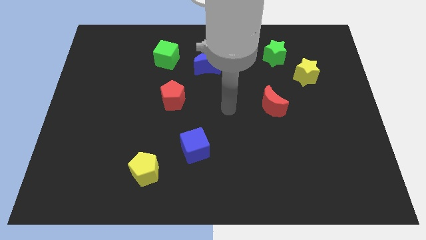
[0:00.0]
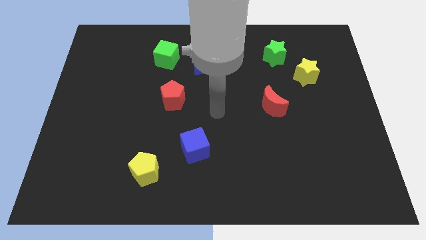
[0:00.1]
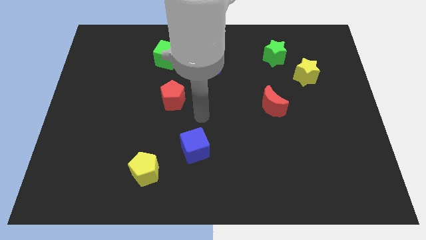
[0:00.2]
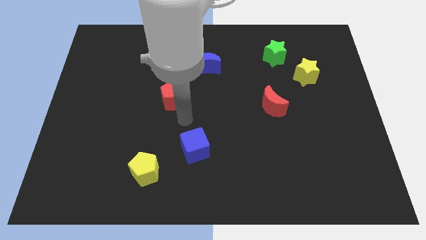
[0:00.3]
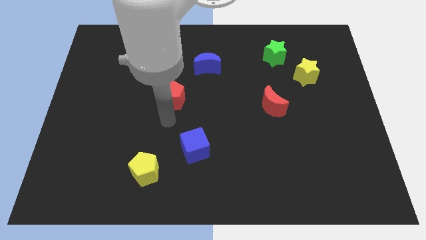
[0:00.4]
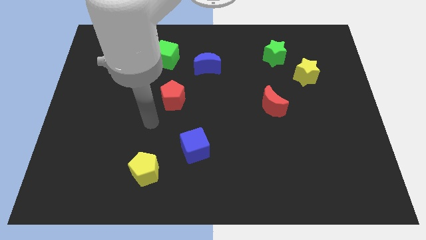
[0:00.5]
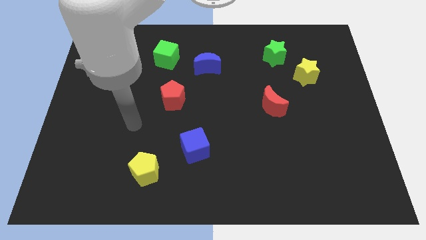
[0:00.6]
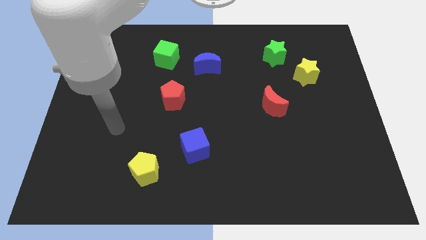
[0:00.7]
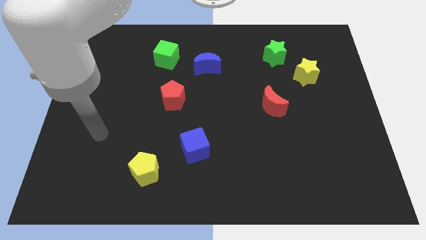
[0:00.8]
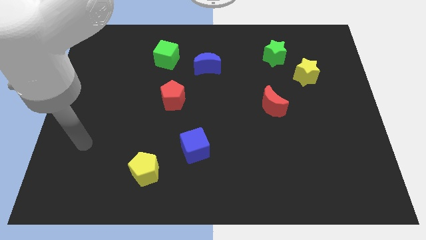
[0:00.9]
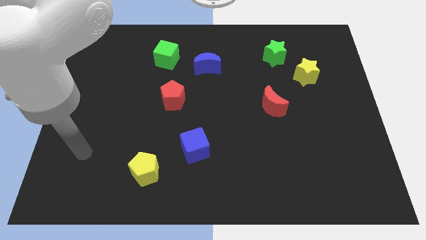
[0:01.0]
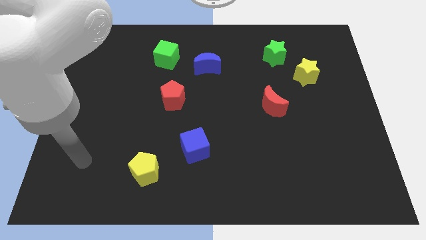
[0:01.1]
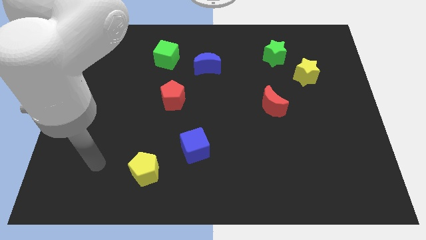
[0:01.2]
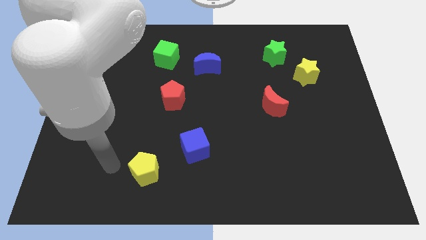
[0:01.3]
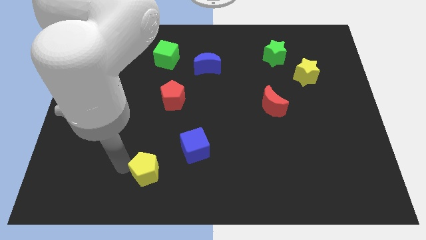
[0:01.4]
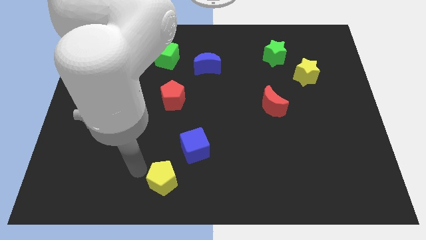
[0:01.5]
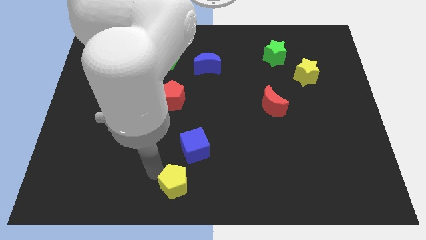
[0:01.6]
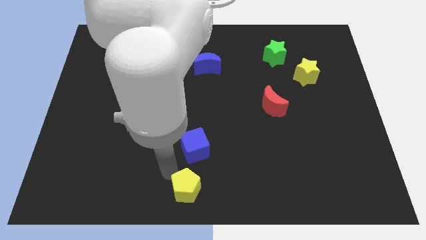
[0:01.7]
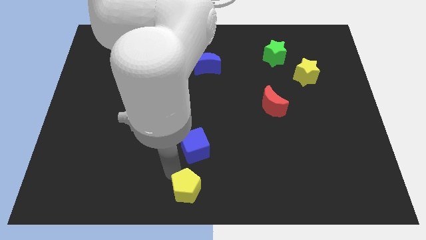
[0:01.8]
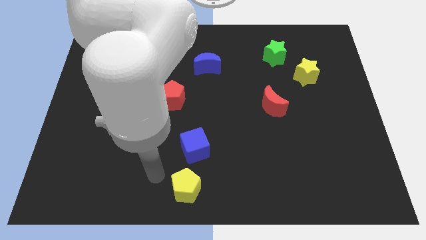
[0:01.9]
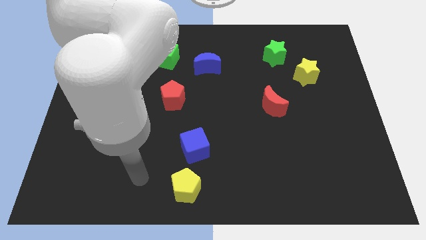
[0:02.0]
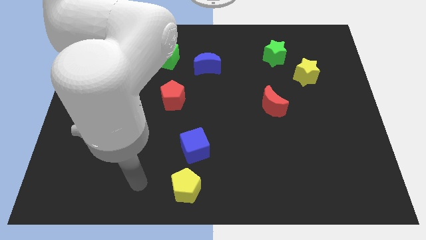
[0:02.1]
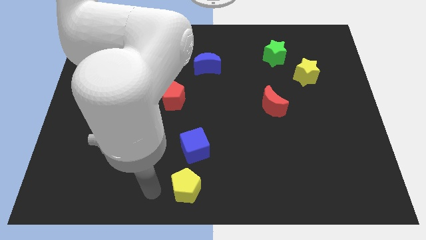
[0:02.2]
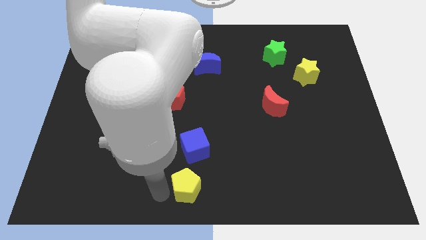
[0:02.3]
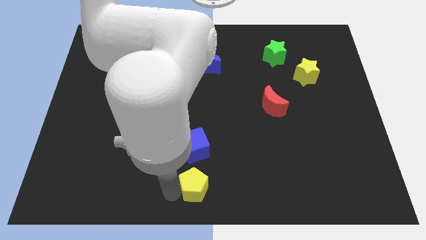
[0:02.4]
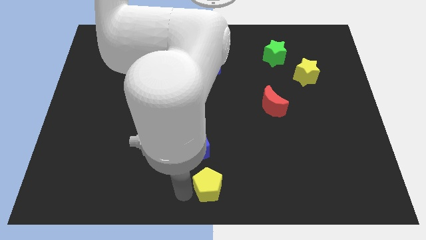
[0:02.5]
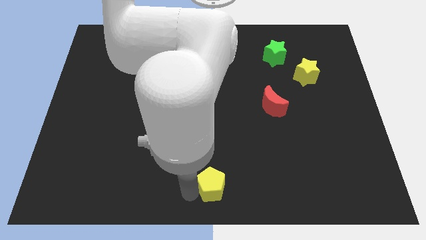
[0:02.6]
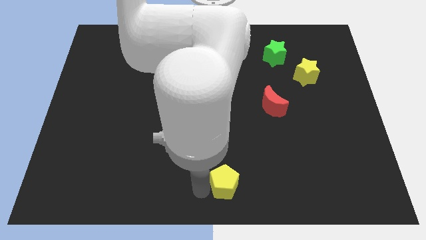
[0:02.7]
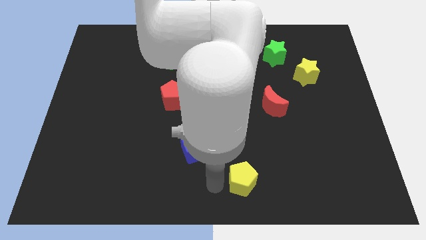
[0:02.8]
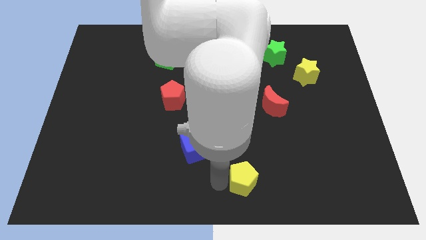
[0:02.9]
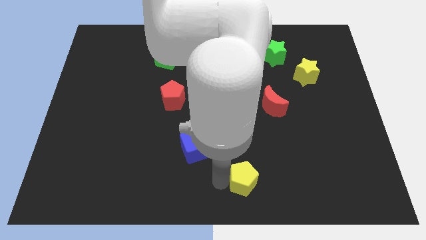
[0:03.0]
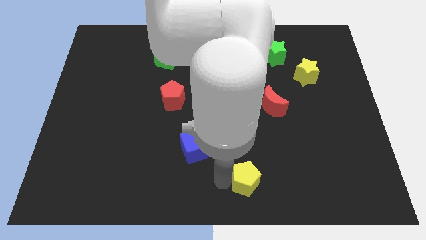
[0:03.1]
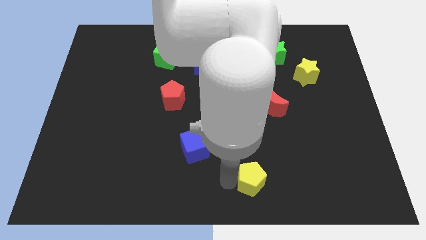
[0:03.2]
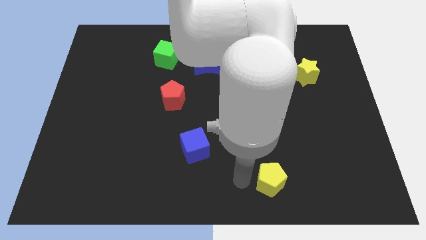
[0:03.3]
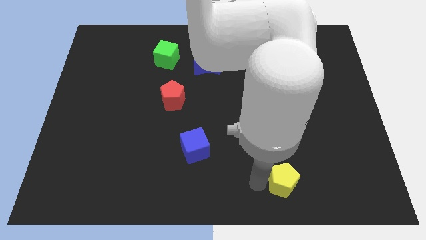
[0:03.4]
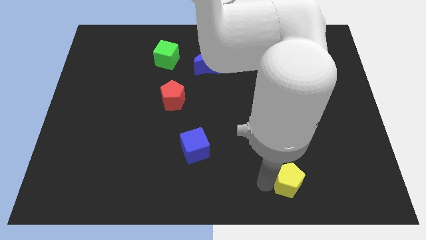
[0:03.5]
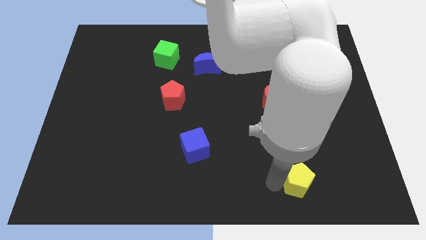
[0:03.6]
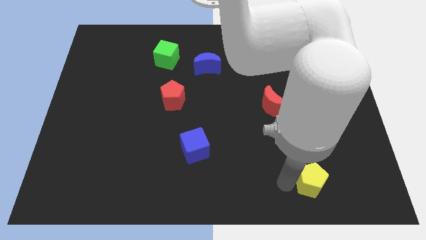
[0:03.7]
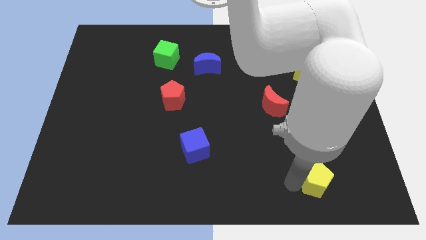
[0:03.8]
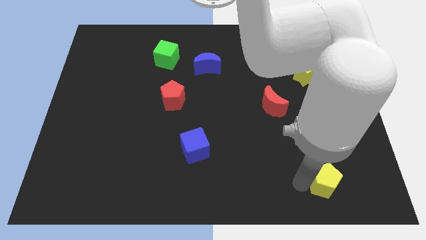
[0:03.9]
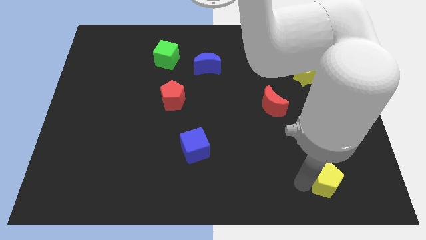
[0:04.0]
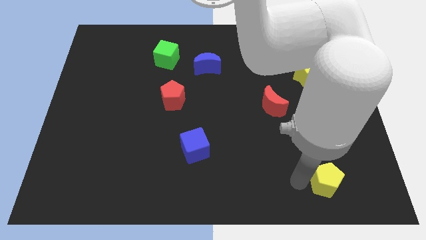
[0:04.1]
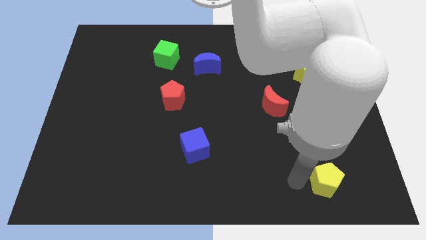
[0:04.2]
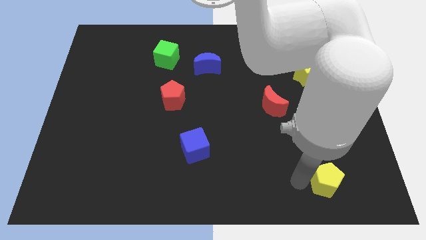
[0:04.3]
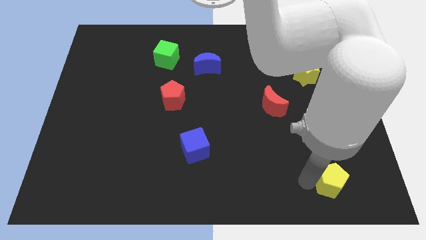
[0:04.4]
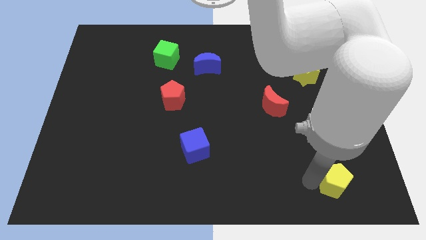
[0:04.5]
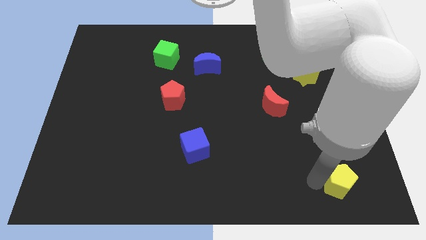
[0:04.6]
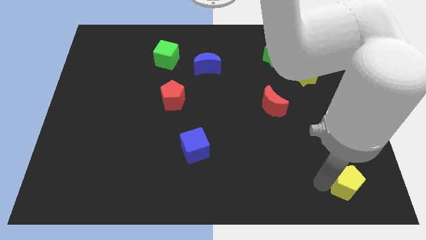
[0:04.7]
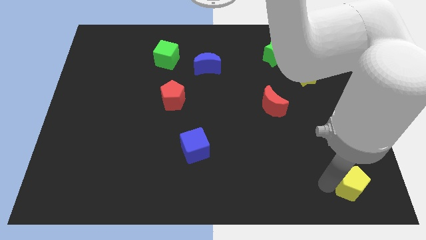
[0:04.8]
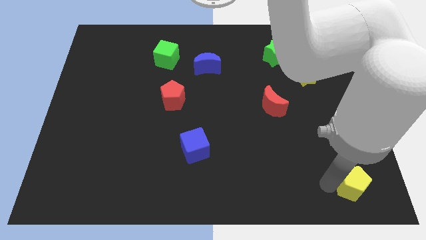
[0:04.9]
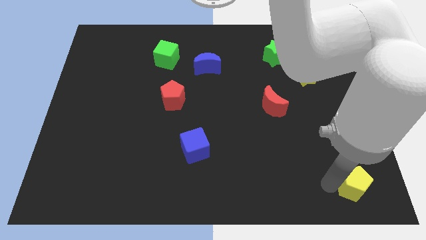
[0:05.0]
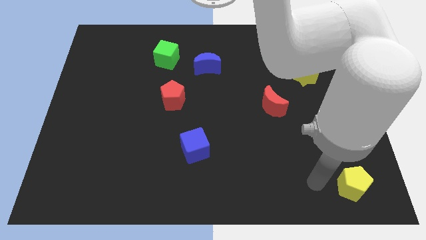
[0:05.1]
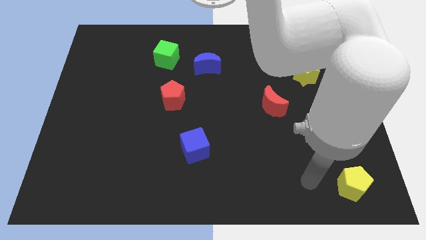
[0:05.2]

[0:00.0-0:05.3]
move yellow pentagon to the bottom right

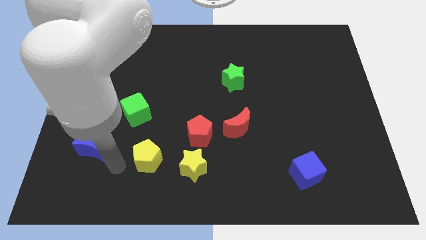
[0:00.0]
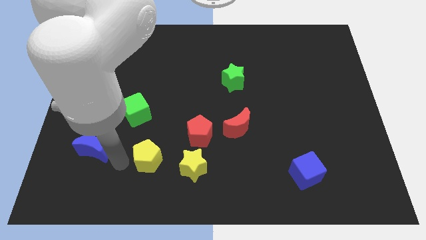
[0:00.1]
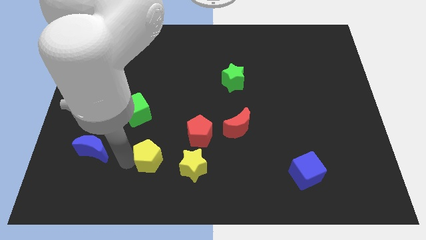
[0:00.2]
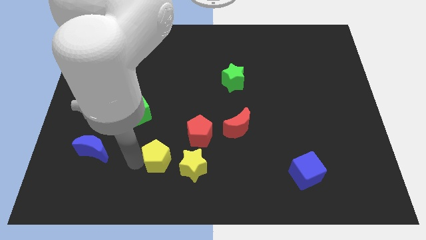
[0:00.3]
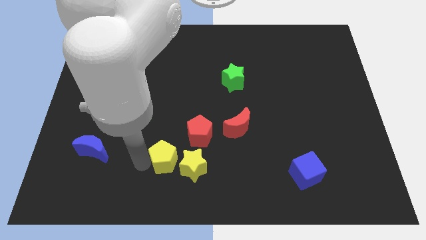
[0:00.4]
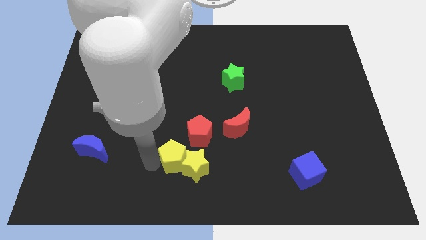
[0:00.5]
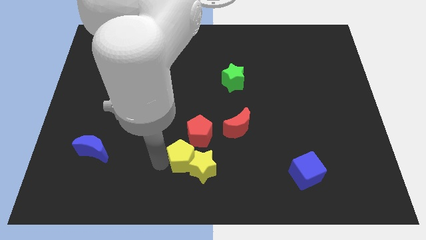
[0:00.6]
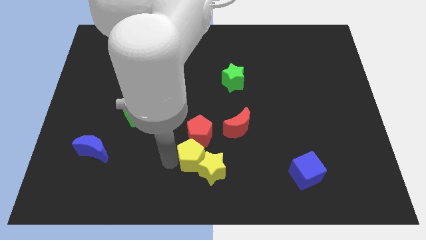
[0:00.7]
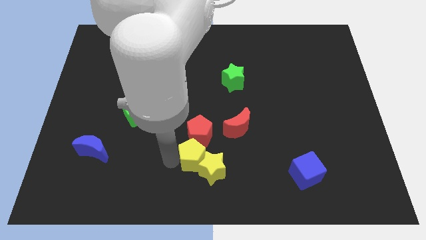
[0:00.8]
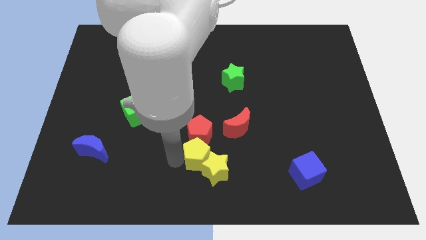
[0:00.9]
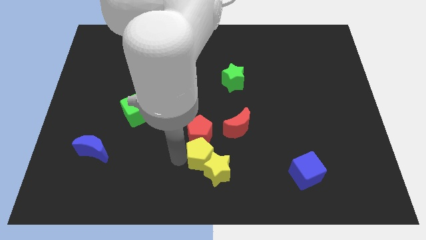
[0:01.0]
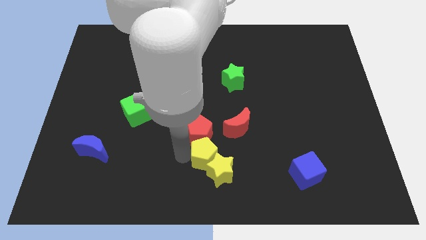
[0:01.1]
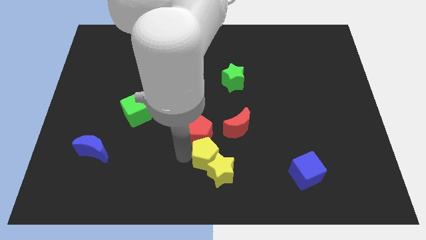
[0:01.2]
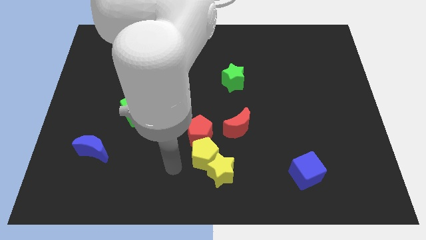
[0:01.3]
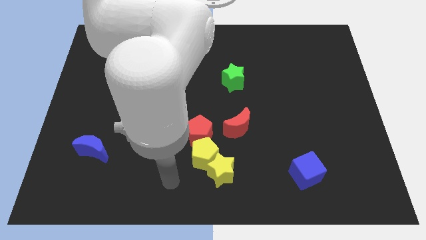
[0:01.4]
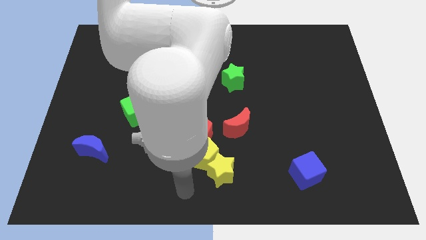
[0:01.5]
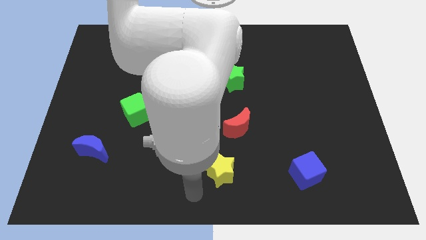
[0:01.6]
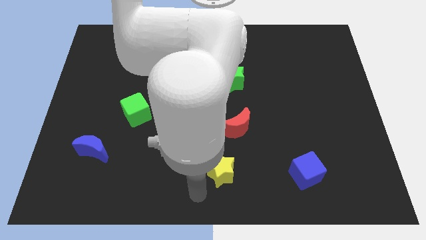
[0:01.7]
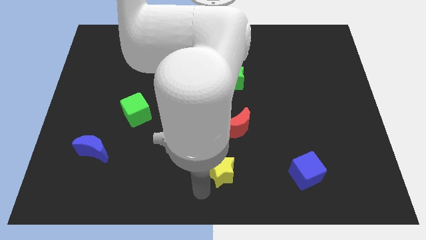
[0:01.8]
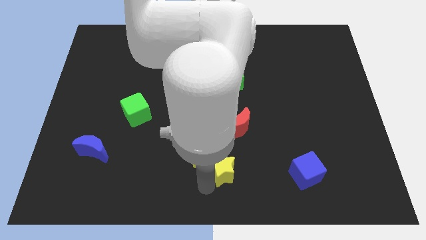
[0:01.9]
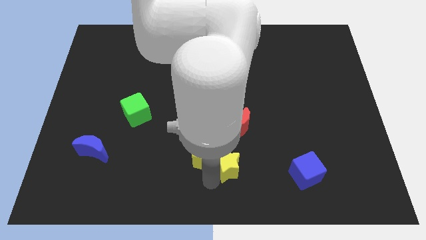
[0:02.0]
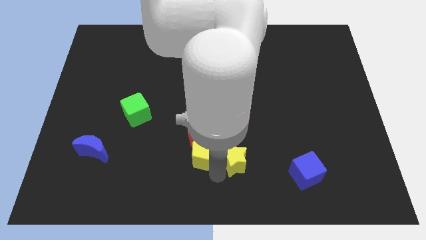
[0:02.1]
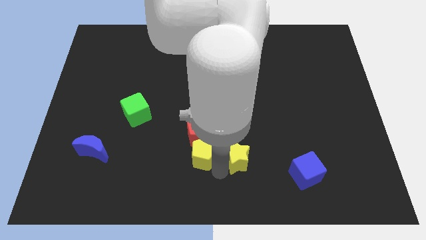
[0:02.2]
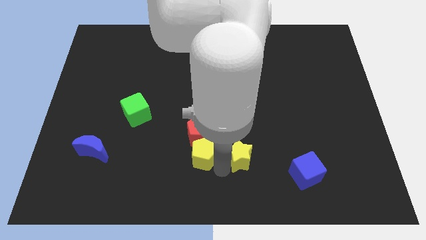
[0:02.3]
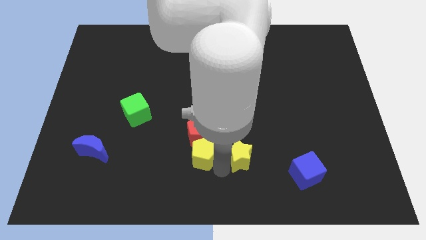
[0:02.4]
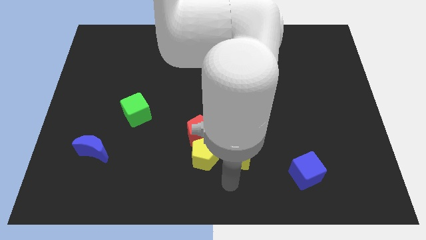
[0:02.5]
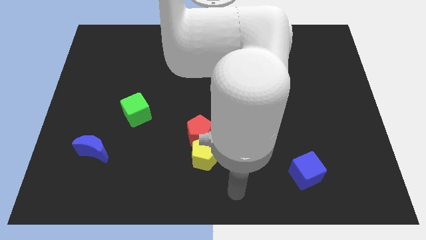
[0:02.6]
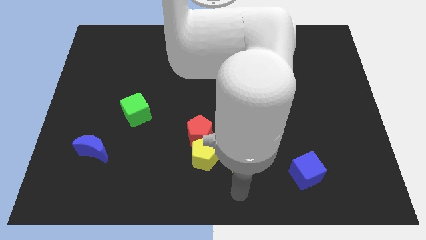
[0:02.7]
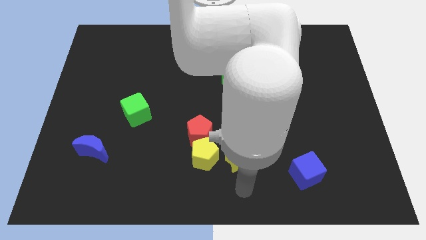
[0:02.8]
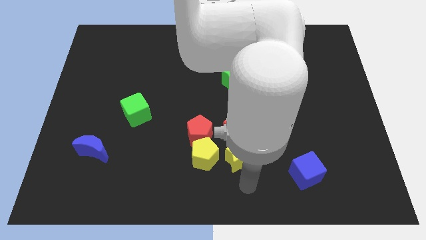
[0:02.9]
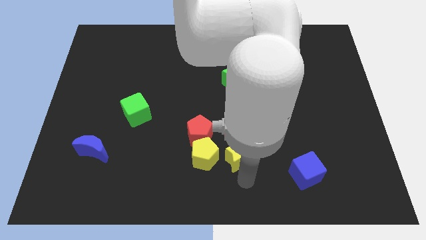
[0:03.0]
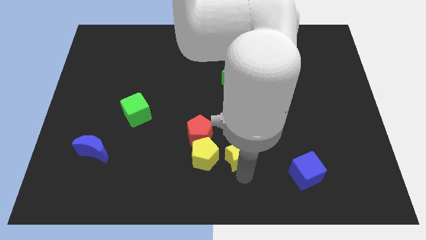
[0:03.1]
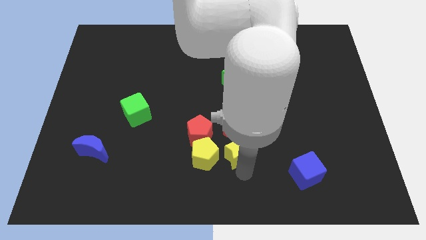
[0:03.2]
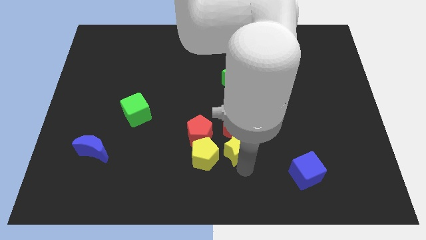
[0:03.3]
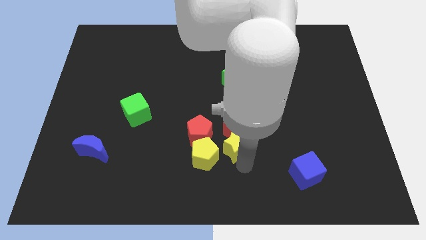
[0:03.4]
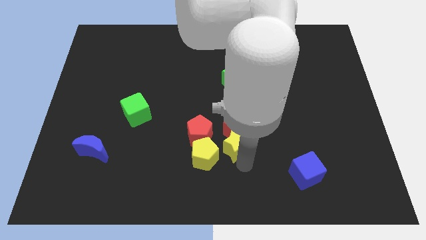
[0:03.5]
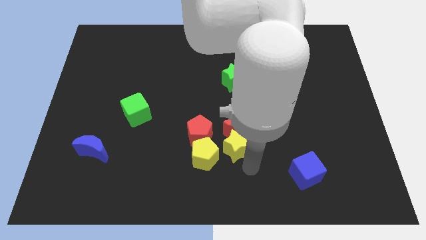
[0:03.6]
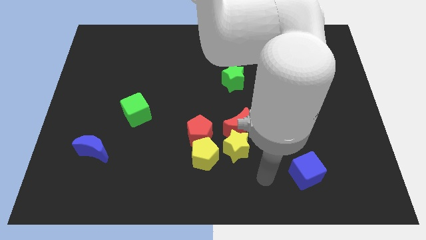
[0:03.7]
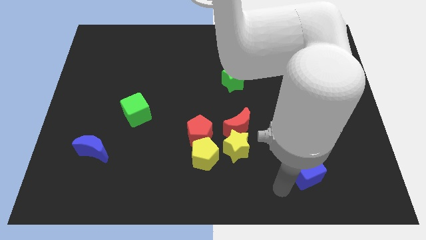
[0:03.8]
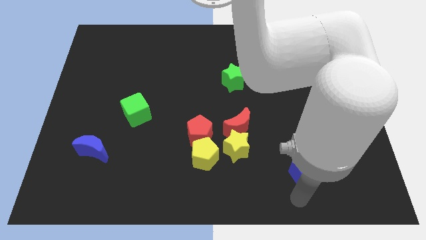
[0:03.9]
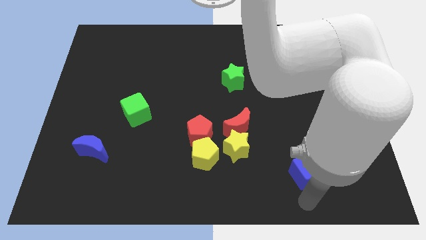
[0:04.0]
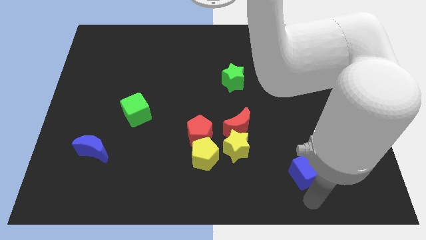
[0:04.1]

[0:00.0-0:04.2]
move both the yellow blocks together near to the both red blocks
